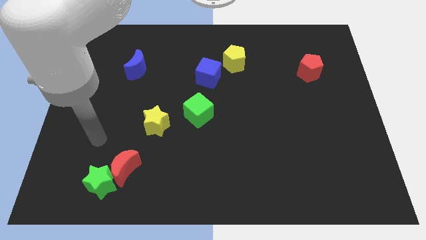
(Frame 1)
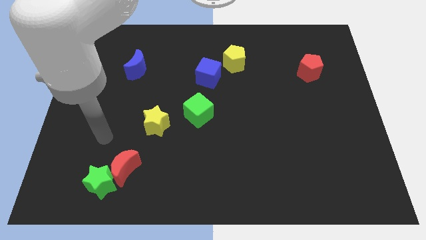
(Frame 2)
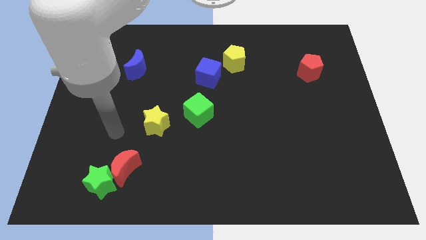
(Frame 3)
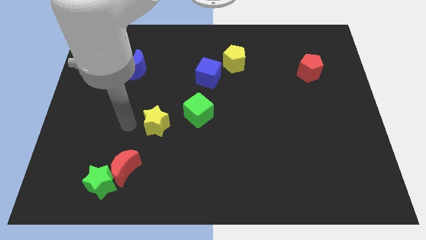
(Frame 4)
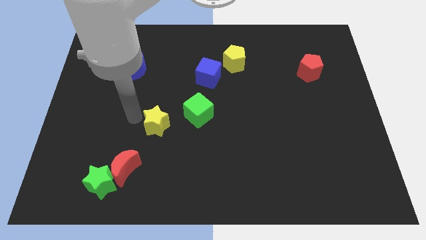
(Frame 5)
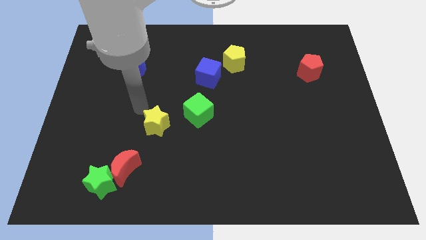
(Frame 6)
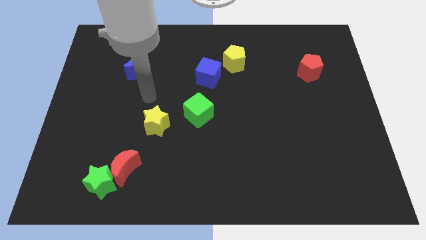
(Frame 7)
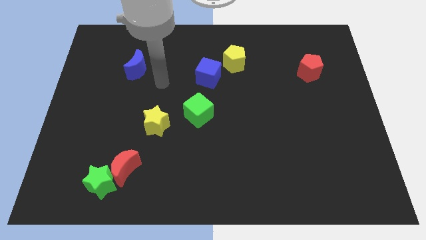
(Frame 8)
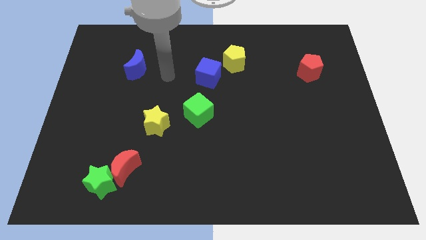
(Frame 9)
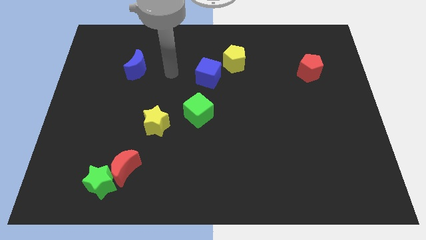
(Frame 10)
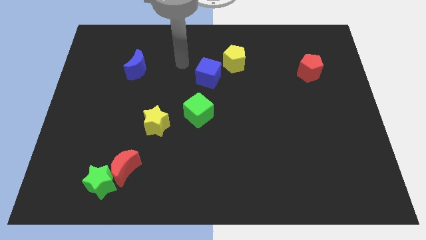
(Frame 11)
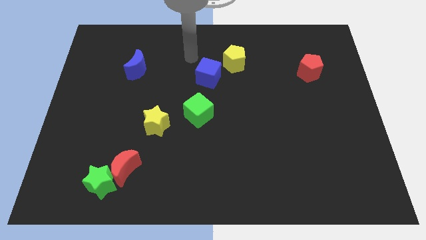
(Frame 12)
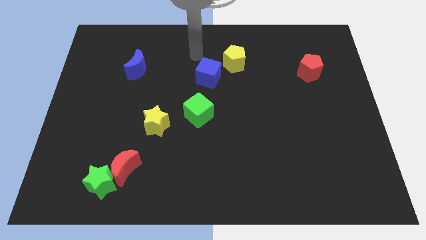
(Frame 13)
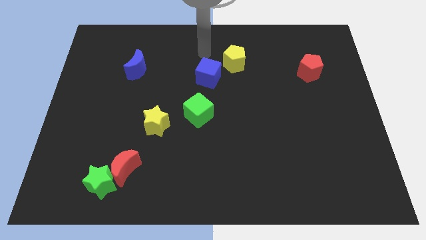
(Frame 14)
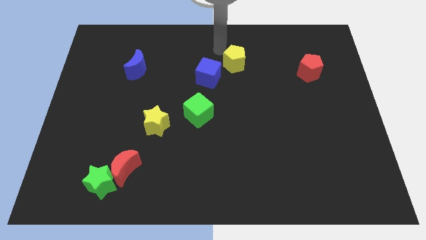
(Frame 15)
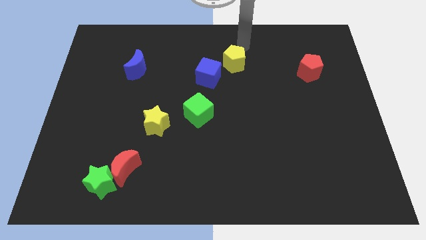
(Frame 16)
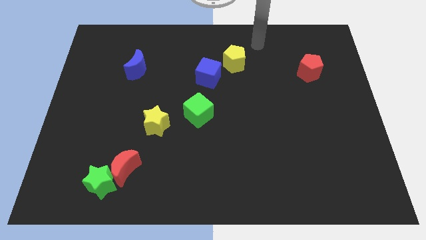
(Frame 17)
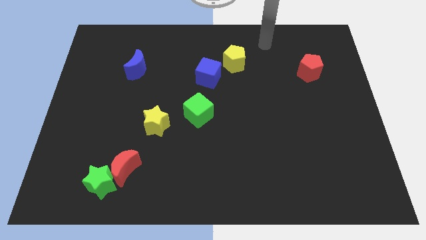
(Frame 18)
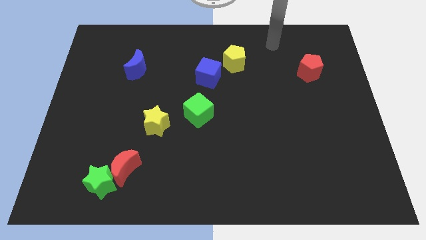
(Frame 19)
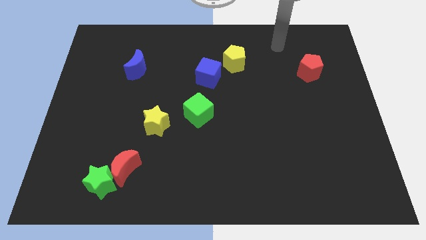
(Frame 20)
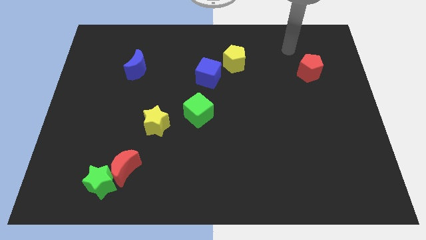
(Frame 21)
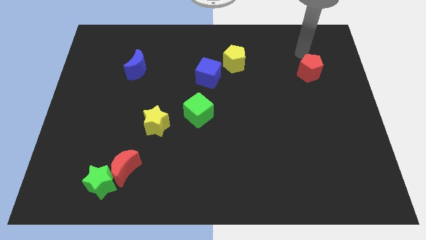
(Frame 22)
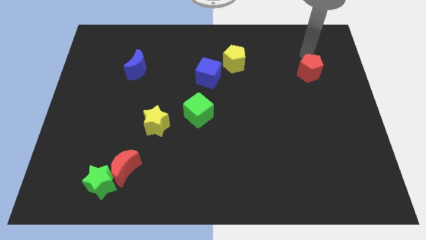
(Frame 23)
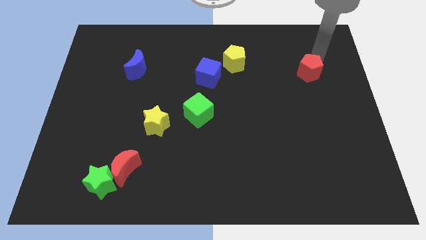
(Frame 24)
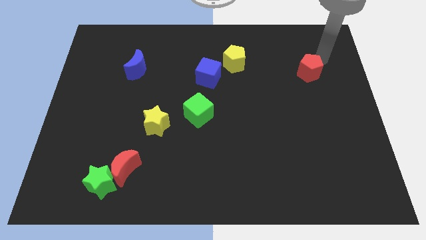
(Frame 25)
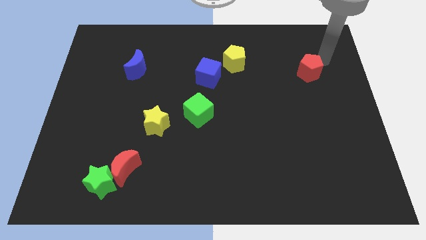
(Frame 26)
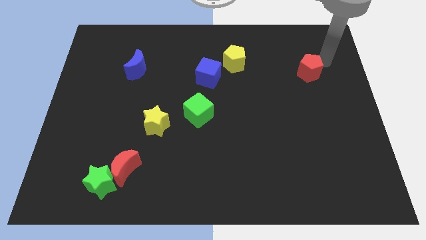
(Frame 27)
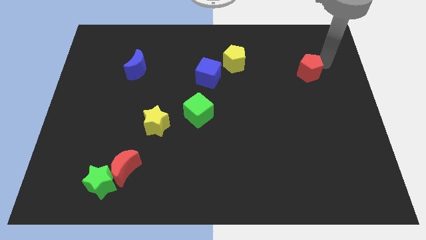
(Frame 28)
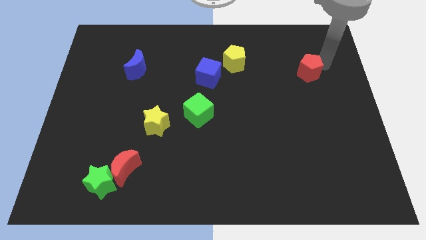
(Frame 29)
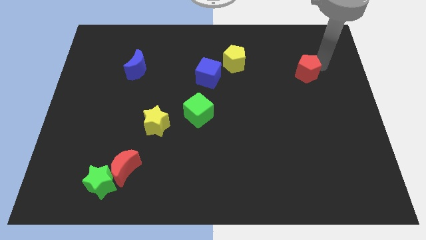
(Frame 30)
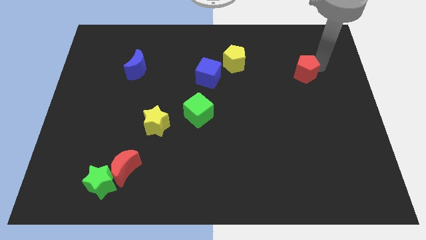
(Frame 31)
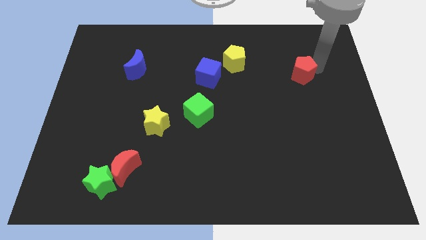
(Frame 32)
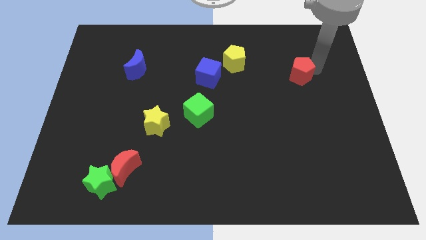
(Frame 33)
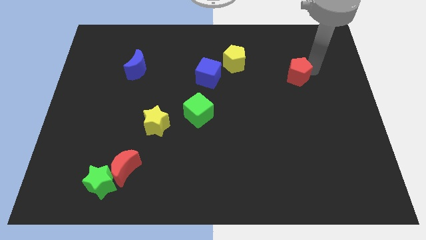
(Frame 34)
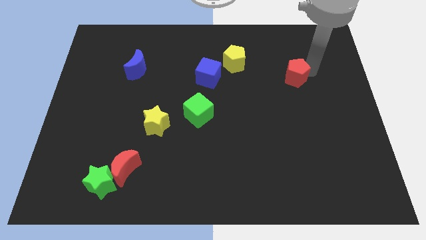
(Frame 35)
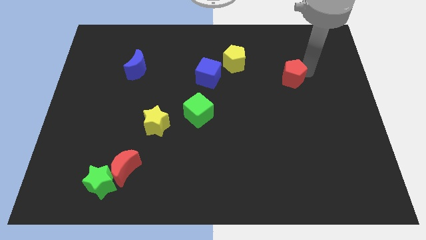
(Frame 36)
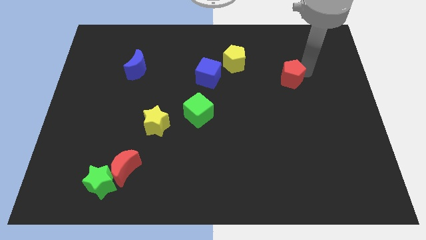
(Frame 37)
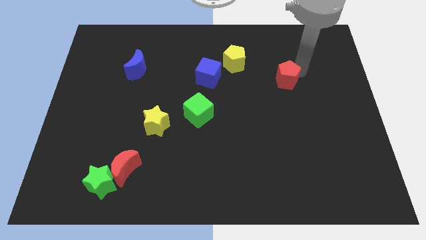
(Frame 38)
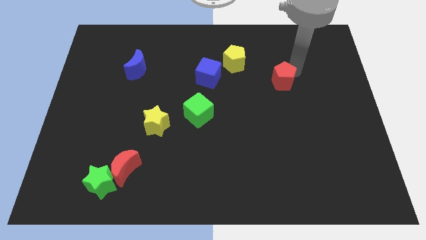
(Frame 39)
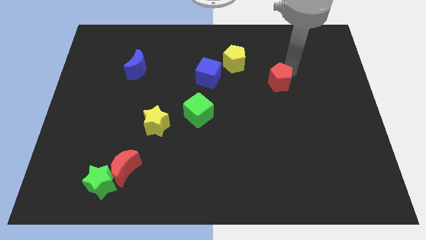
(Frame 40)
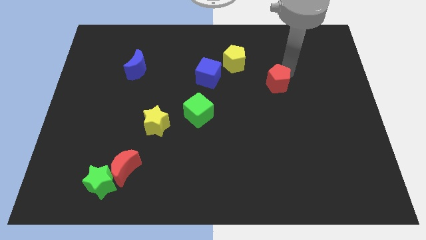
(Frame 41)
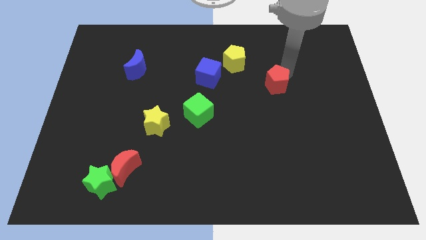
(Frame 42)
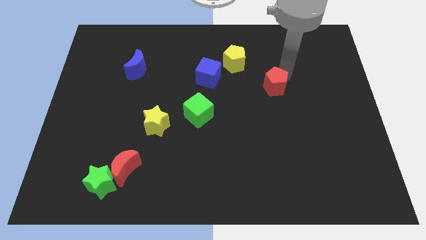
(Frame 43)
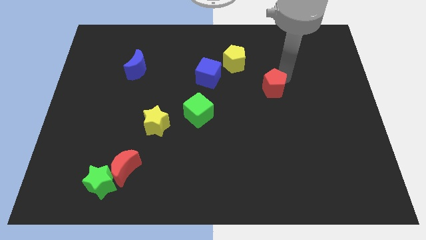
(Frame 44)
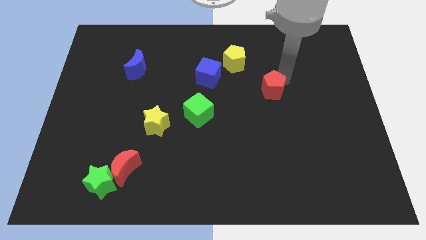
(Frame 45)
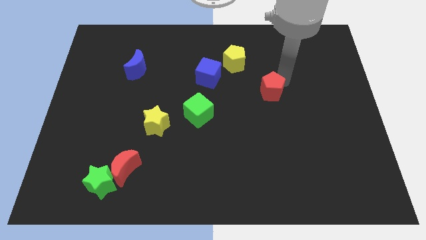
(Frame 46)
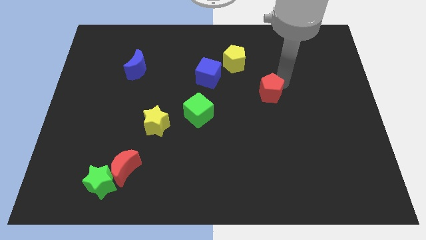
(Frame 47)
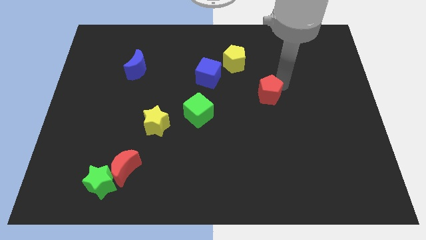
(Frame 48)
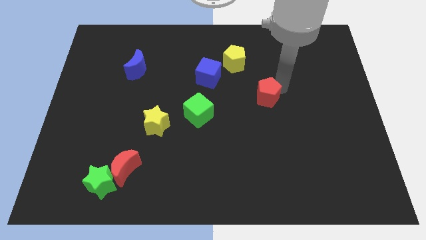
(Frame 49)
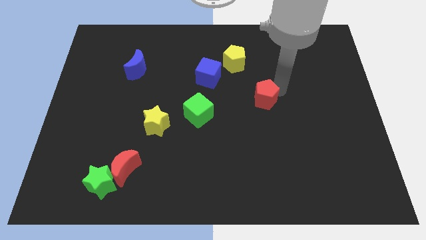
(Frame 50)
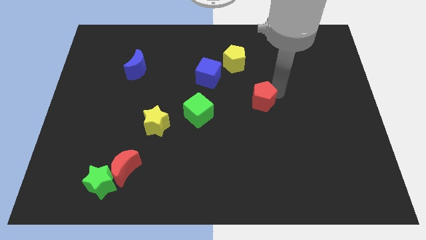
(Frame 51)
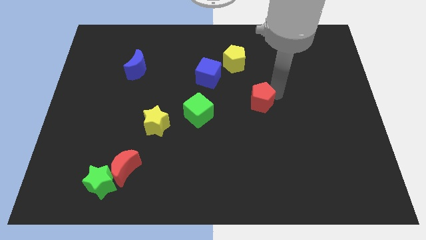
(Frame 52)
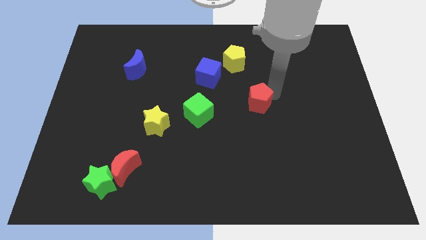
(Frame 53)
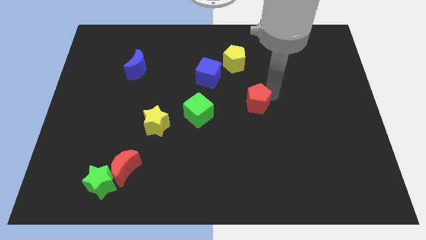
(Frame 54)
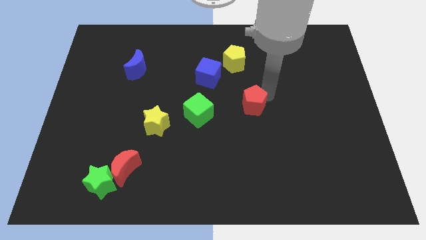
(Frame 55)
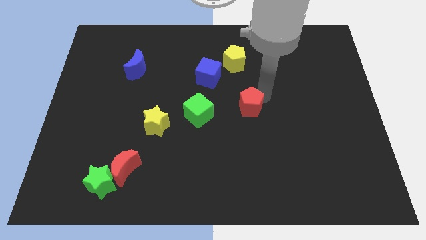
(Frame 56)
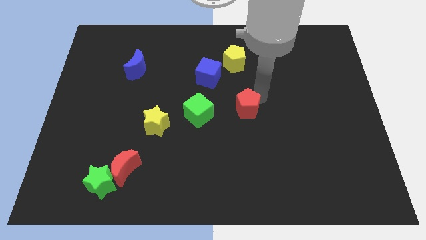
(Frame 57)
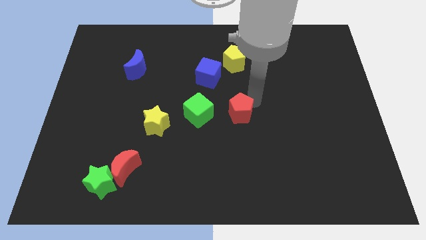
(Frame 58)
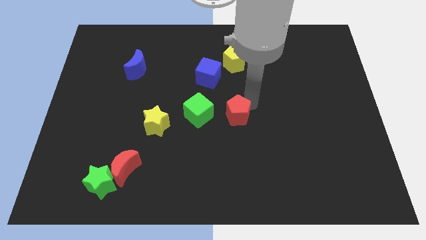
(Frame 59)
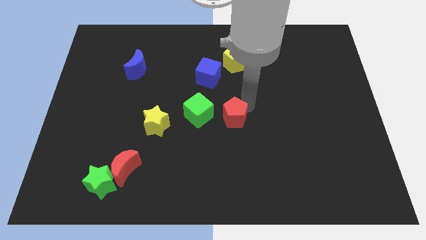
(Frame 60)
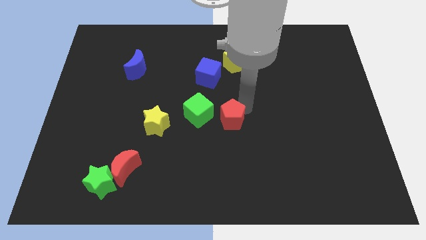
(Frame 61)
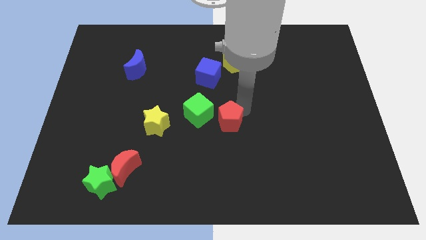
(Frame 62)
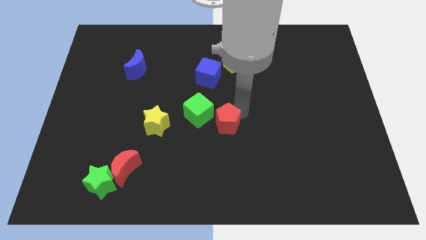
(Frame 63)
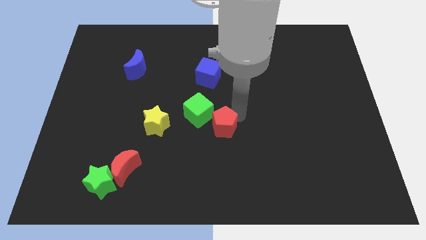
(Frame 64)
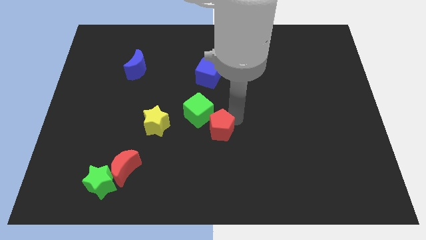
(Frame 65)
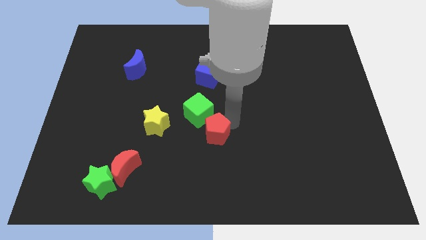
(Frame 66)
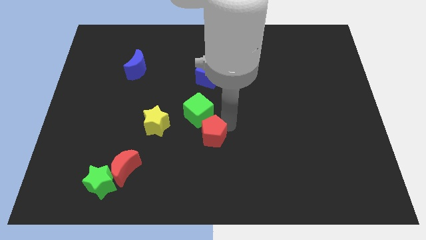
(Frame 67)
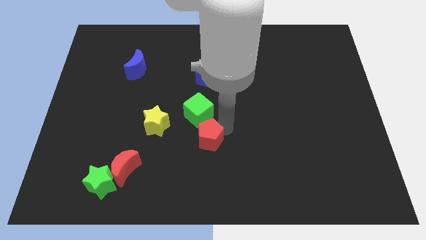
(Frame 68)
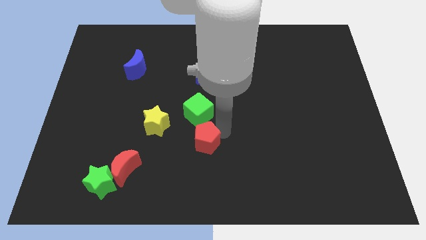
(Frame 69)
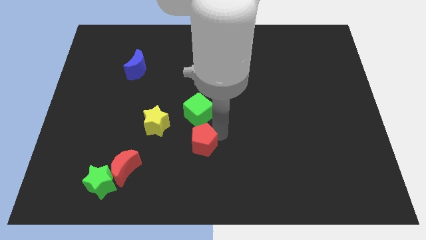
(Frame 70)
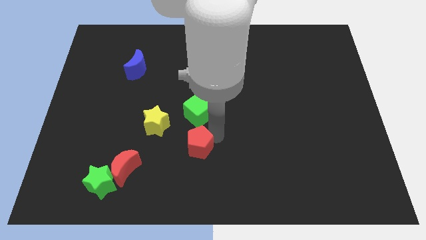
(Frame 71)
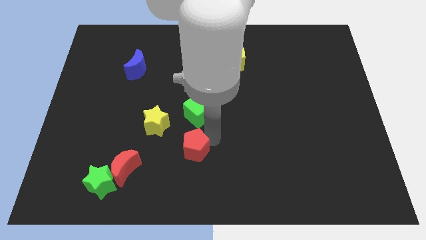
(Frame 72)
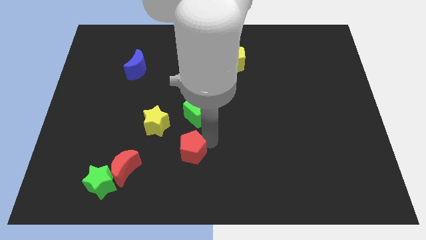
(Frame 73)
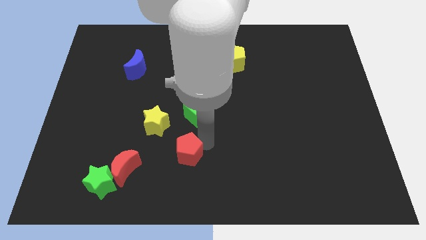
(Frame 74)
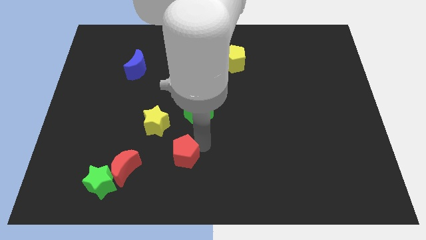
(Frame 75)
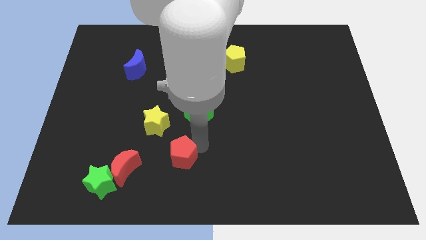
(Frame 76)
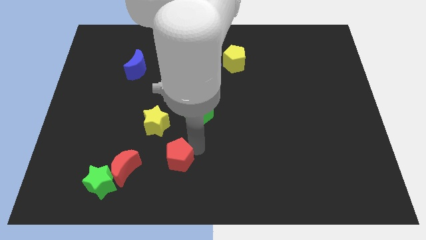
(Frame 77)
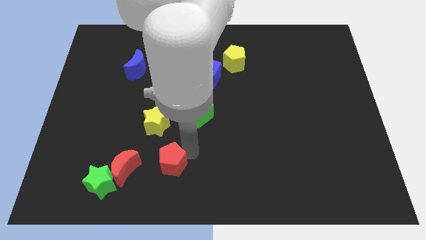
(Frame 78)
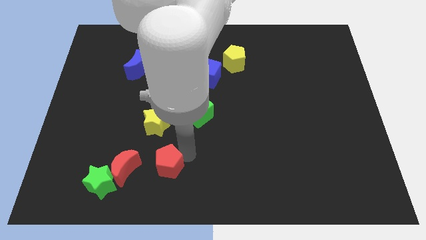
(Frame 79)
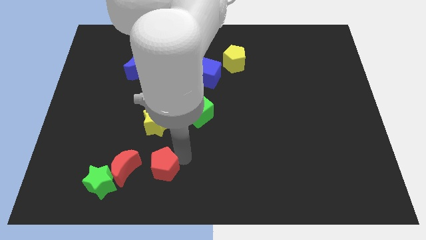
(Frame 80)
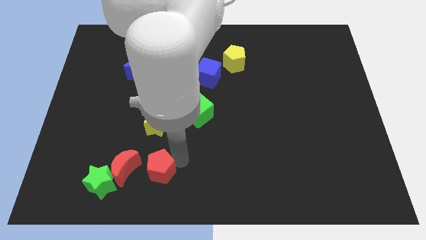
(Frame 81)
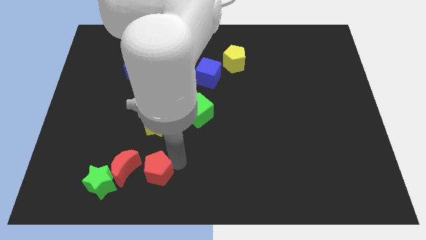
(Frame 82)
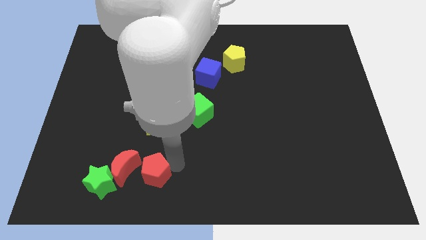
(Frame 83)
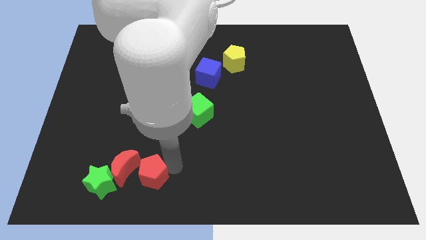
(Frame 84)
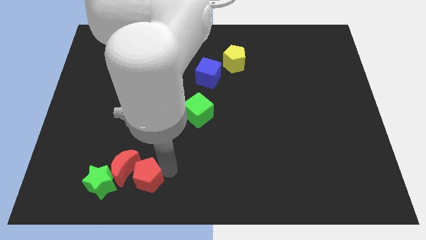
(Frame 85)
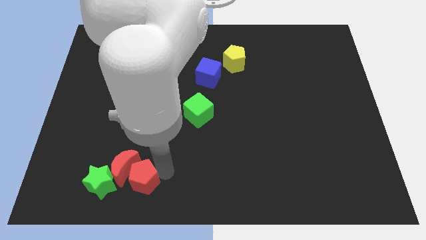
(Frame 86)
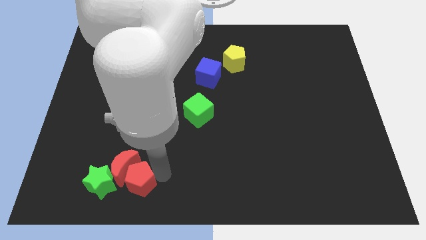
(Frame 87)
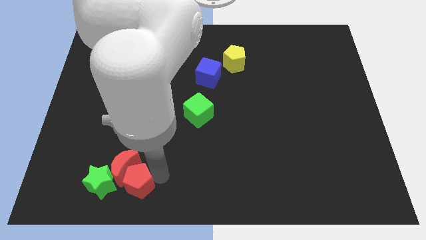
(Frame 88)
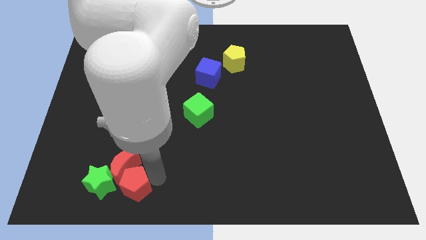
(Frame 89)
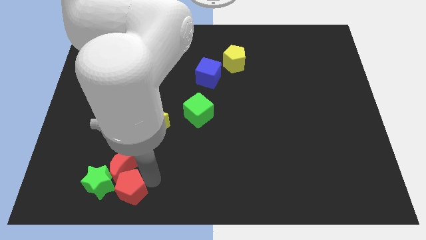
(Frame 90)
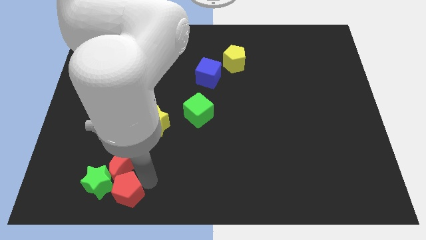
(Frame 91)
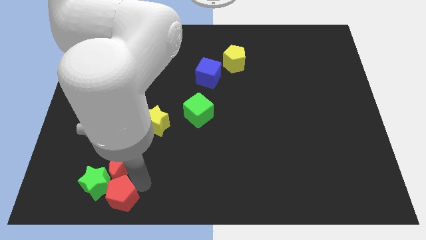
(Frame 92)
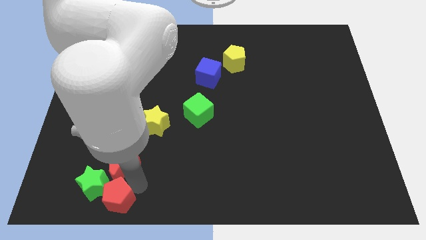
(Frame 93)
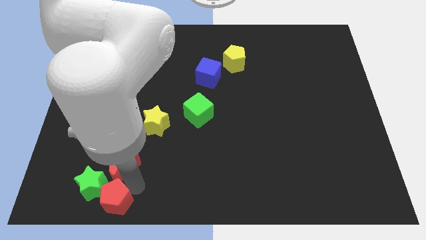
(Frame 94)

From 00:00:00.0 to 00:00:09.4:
push the red pentagon towards the green star
